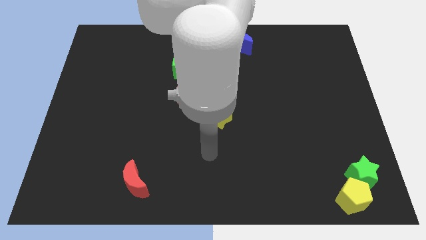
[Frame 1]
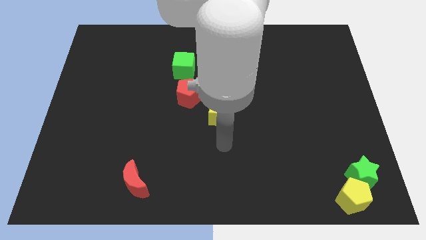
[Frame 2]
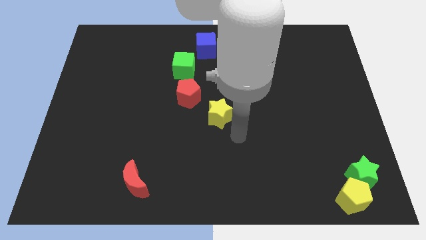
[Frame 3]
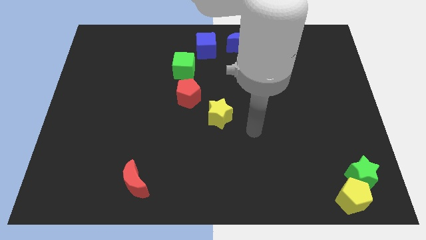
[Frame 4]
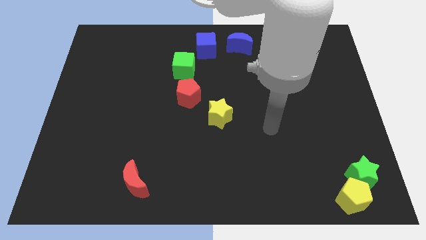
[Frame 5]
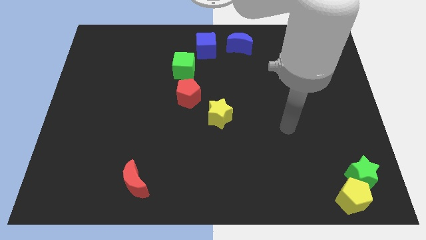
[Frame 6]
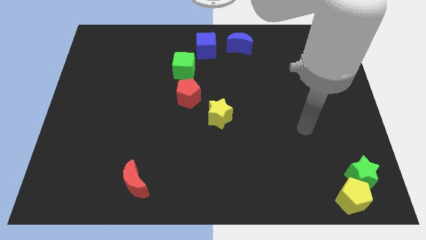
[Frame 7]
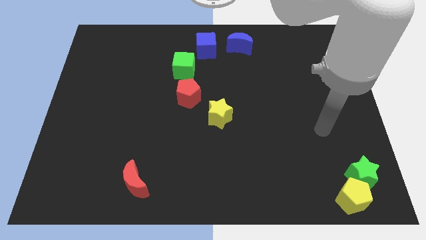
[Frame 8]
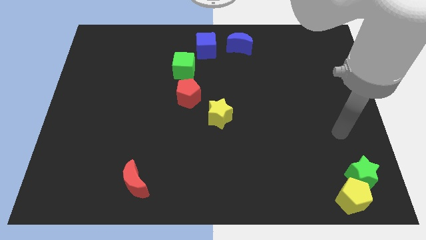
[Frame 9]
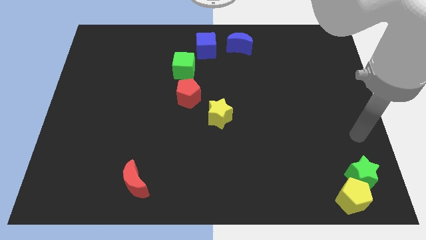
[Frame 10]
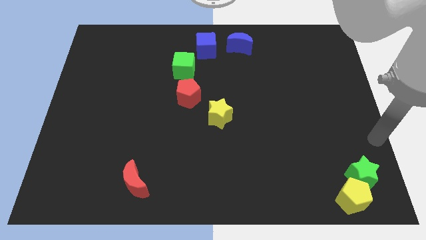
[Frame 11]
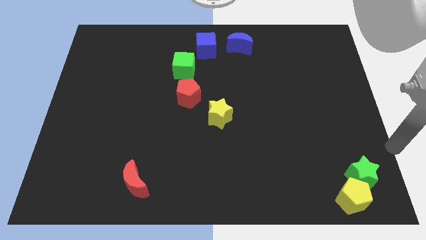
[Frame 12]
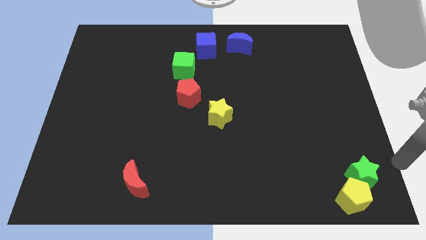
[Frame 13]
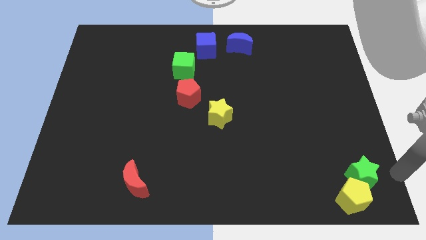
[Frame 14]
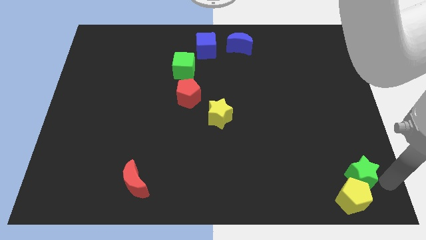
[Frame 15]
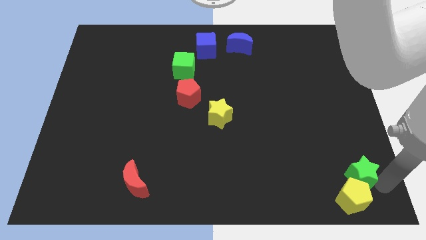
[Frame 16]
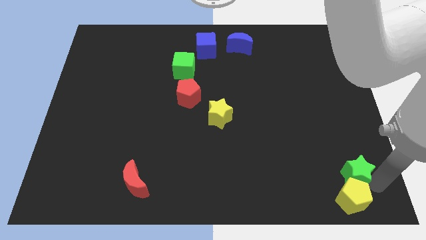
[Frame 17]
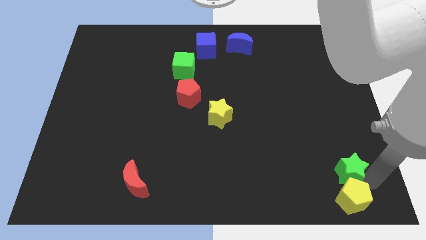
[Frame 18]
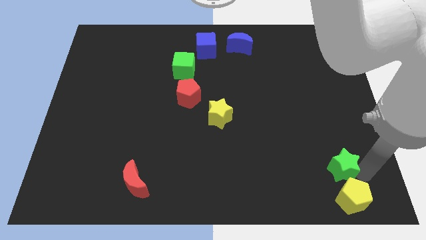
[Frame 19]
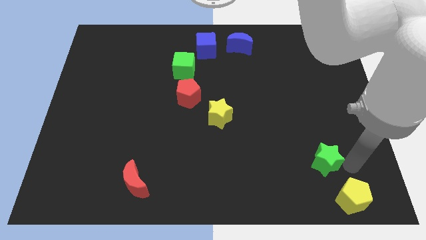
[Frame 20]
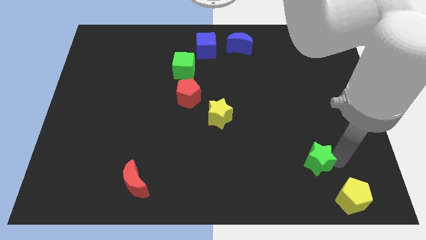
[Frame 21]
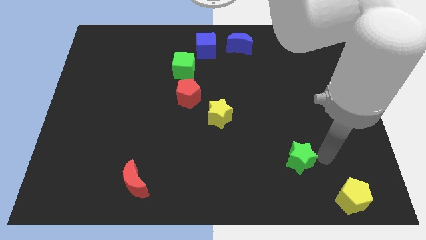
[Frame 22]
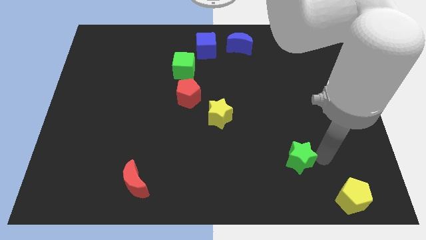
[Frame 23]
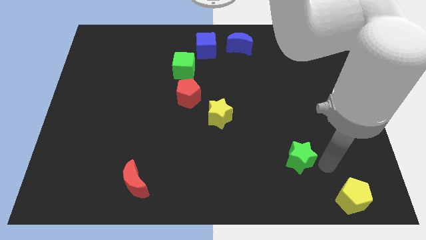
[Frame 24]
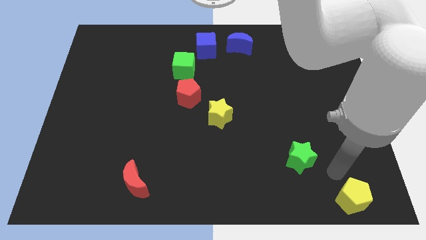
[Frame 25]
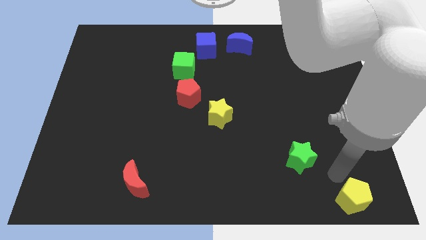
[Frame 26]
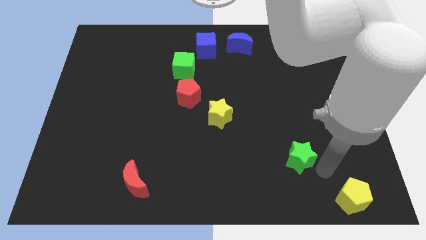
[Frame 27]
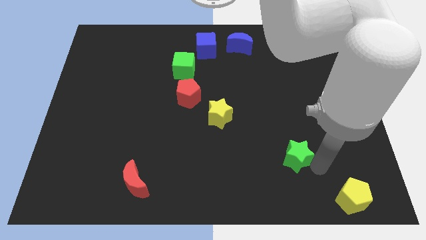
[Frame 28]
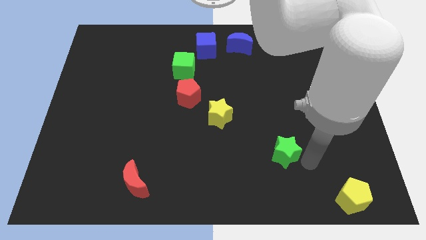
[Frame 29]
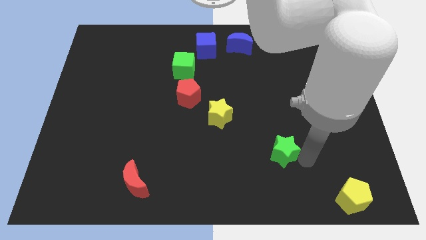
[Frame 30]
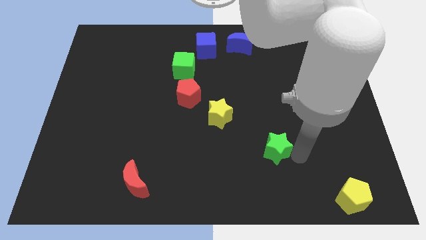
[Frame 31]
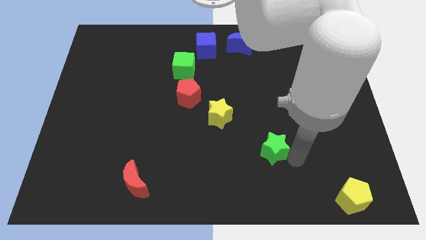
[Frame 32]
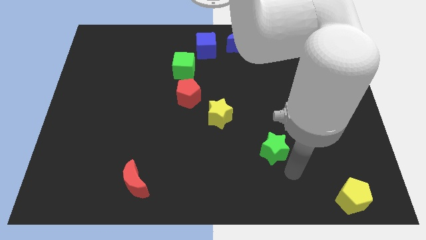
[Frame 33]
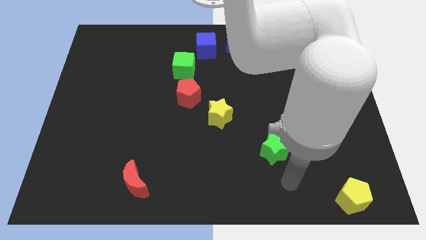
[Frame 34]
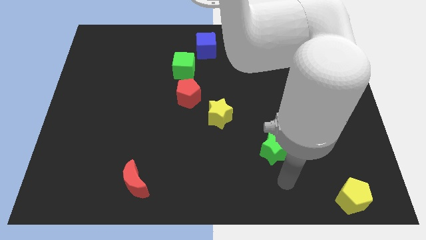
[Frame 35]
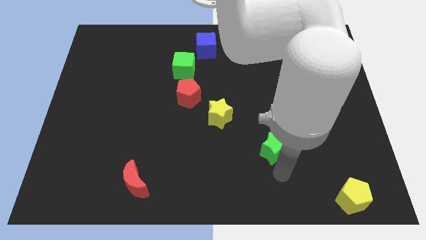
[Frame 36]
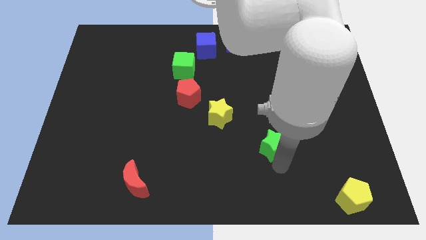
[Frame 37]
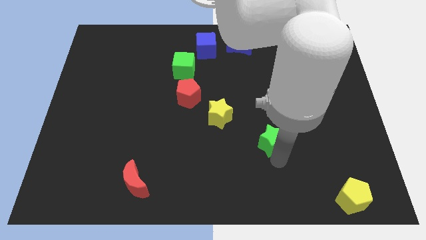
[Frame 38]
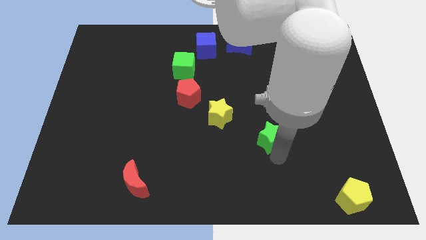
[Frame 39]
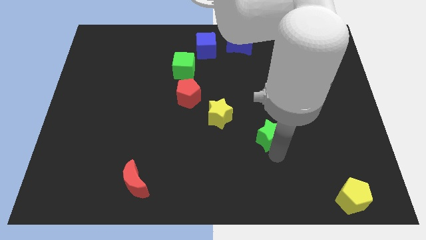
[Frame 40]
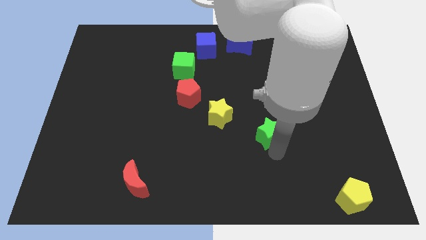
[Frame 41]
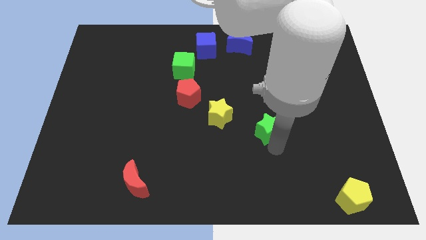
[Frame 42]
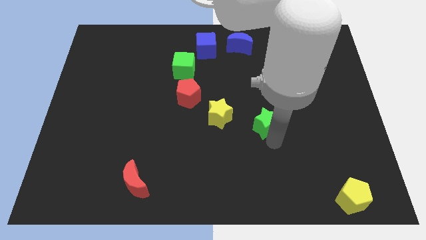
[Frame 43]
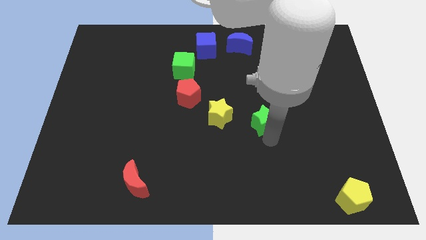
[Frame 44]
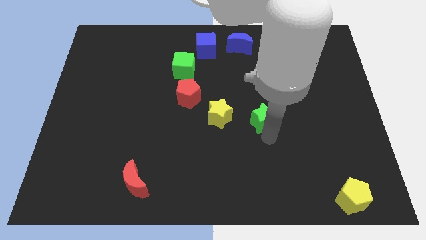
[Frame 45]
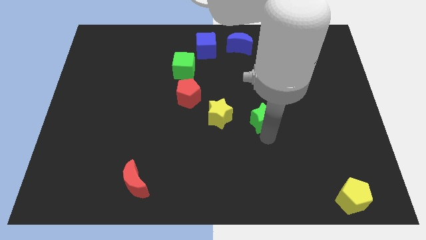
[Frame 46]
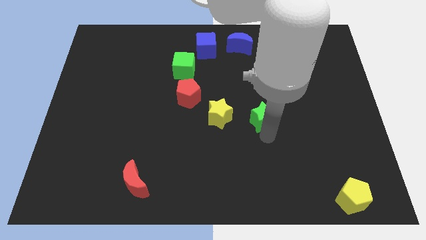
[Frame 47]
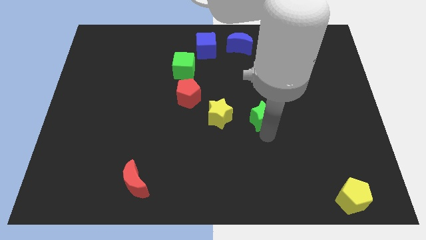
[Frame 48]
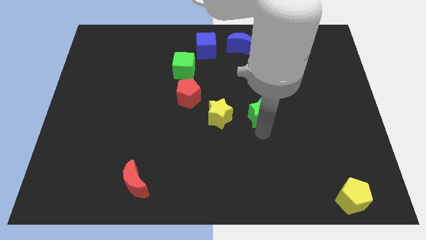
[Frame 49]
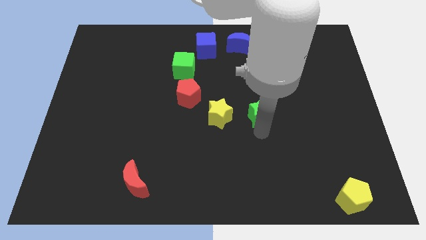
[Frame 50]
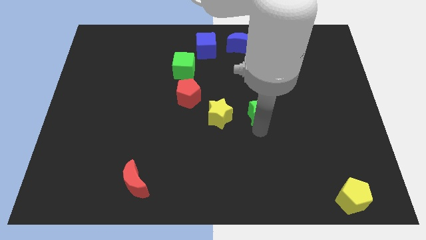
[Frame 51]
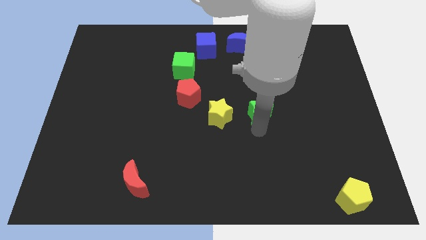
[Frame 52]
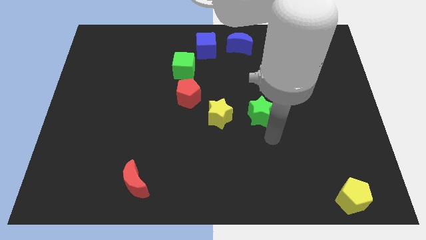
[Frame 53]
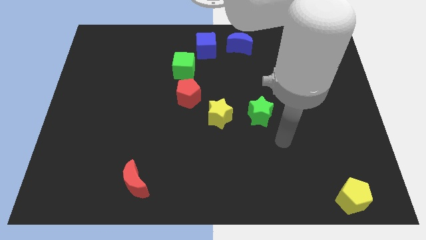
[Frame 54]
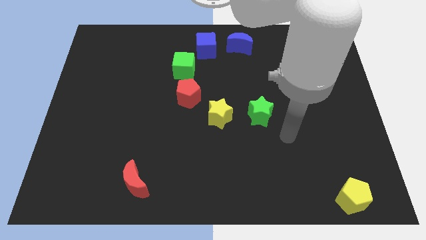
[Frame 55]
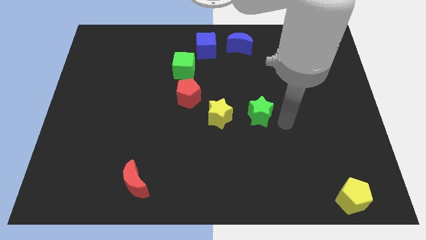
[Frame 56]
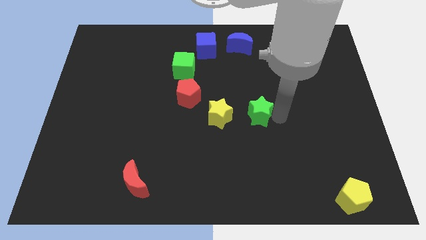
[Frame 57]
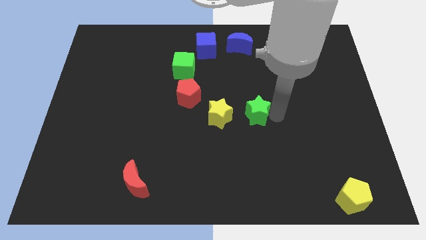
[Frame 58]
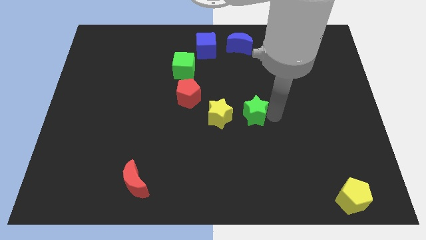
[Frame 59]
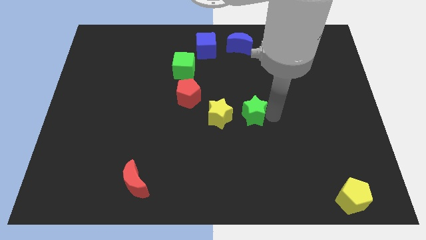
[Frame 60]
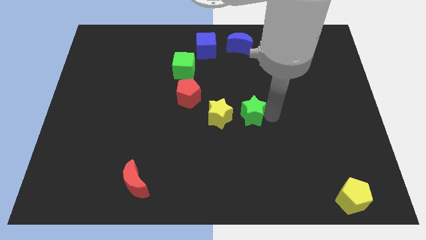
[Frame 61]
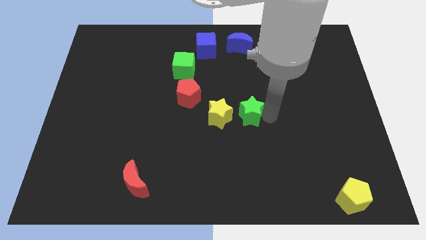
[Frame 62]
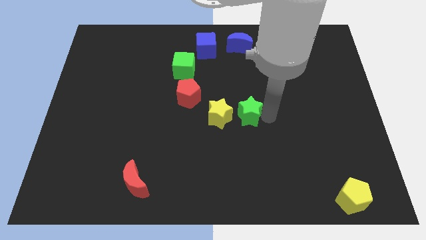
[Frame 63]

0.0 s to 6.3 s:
place the green star right to the yellow star

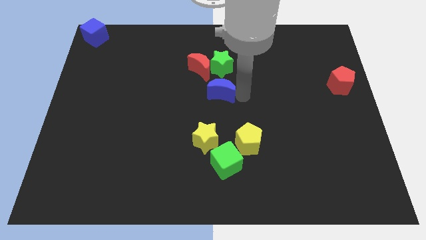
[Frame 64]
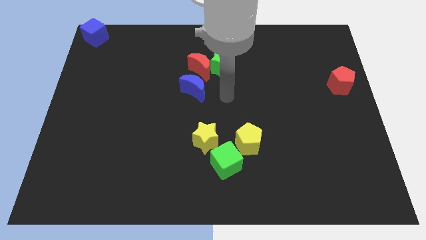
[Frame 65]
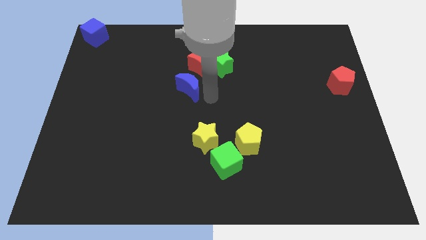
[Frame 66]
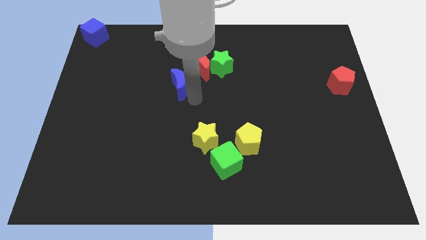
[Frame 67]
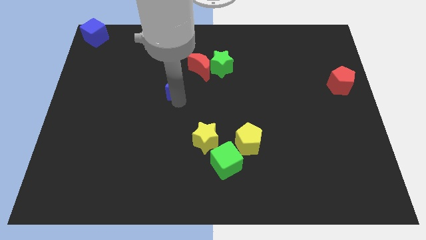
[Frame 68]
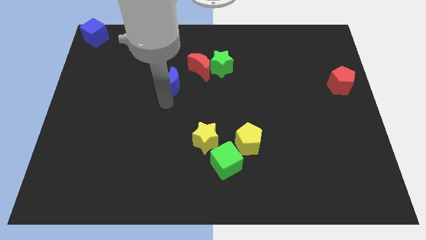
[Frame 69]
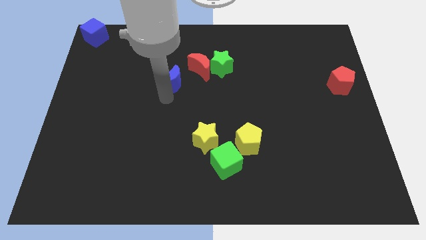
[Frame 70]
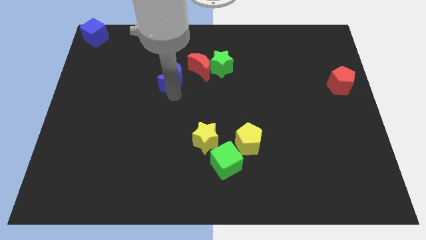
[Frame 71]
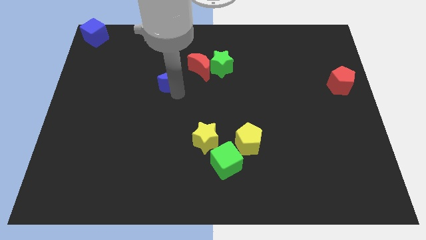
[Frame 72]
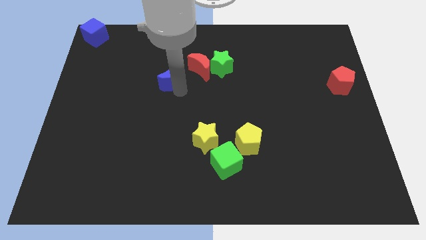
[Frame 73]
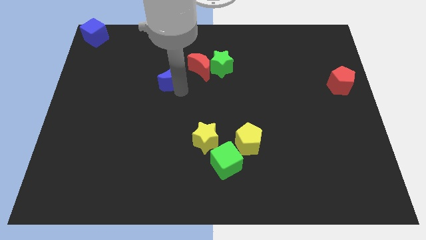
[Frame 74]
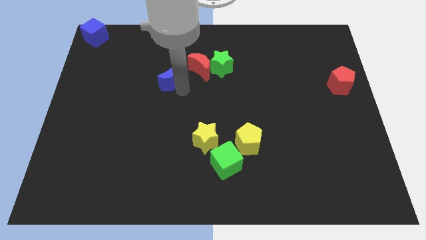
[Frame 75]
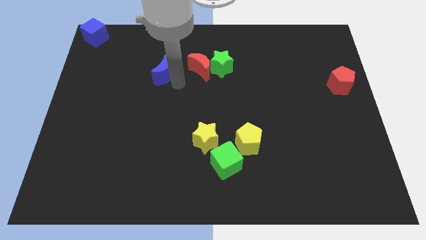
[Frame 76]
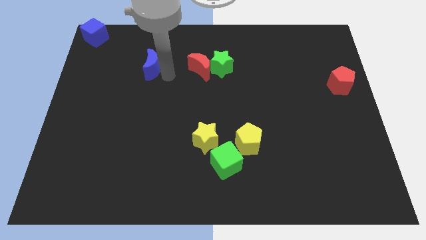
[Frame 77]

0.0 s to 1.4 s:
place the blue crescent to the left of the red crescent

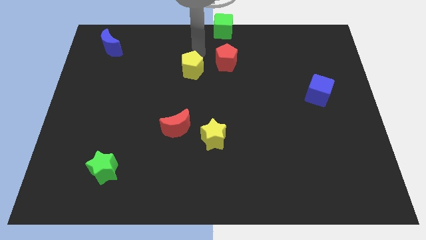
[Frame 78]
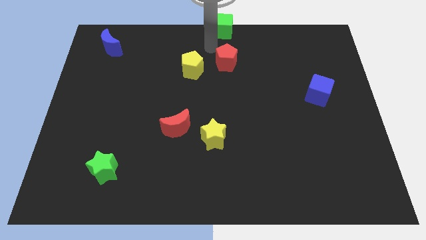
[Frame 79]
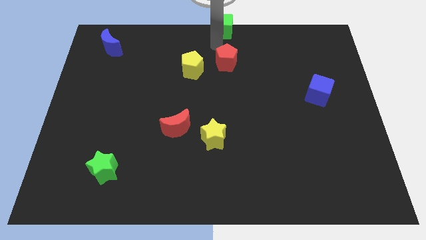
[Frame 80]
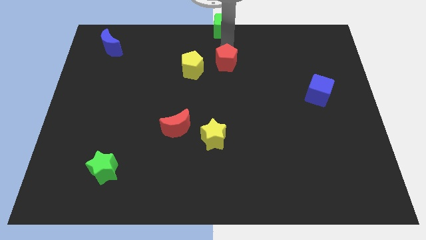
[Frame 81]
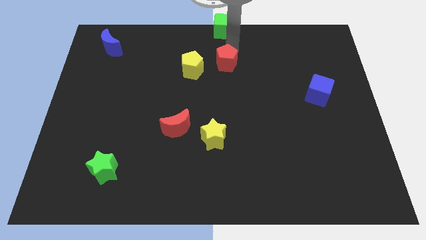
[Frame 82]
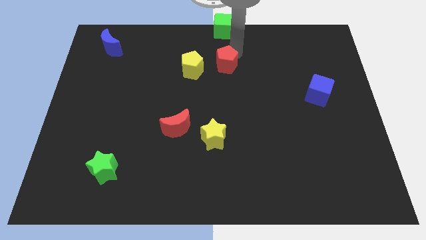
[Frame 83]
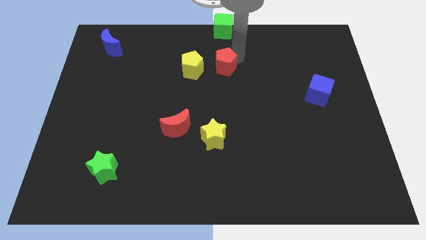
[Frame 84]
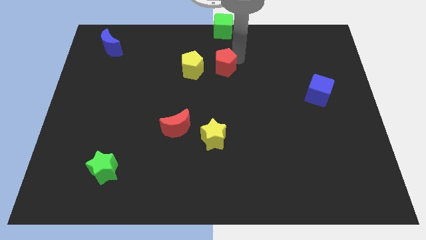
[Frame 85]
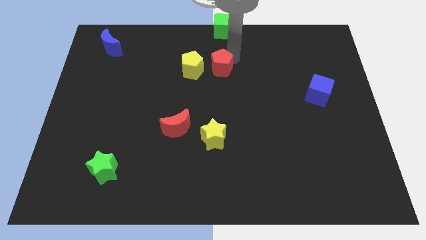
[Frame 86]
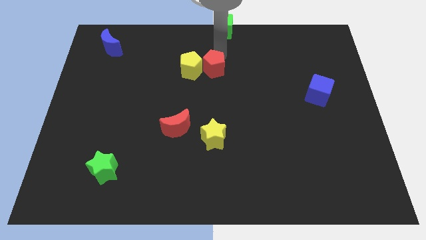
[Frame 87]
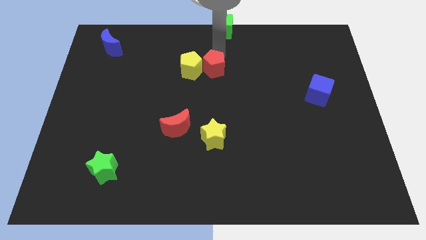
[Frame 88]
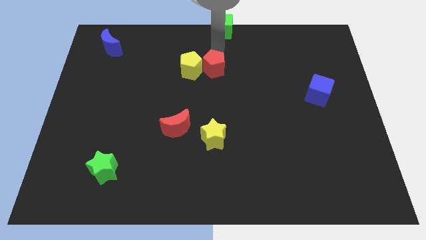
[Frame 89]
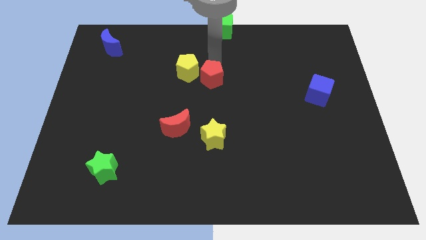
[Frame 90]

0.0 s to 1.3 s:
move the red pentagon into the yellow pentagon
